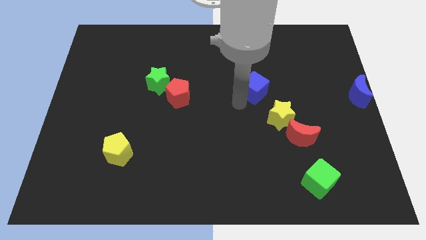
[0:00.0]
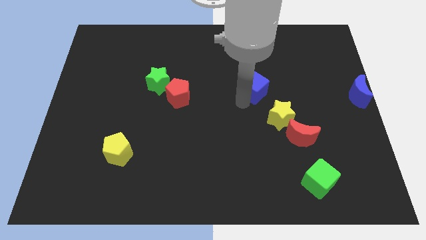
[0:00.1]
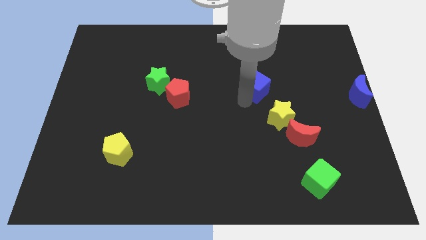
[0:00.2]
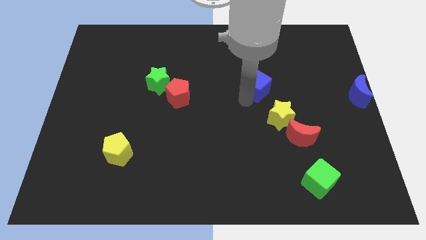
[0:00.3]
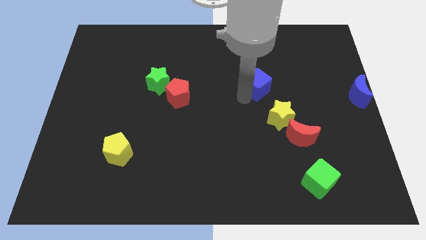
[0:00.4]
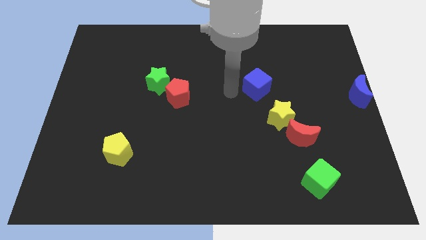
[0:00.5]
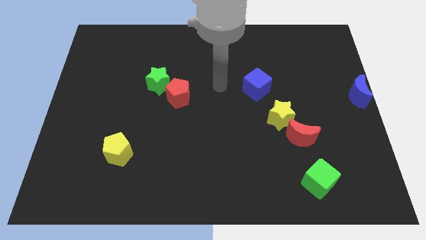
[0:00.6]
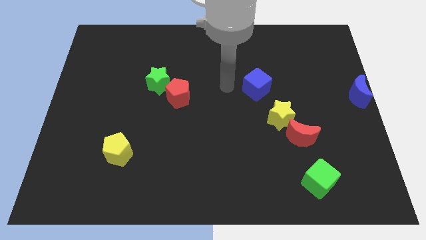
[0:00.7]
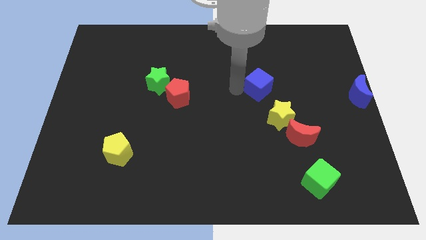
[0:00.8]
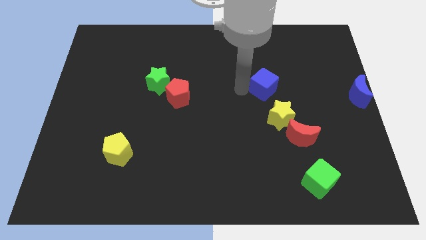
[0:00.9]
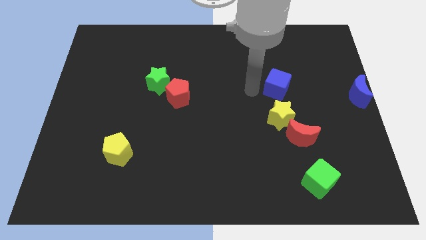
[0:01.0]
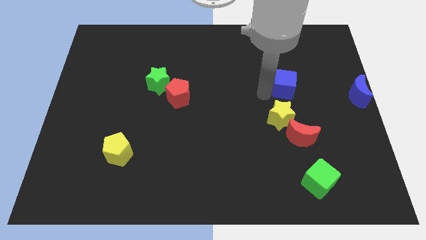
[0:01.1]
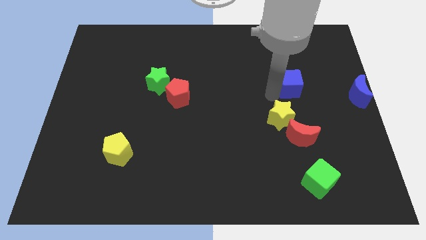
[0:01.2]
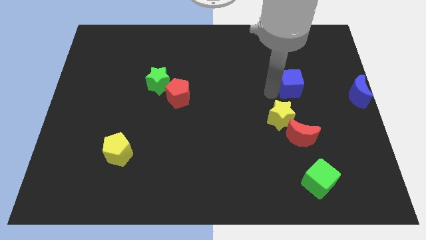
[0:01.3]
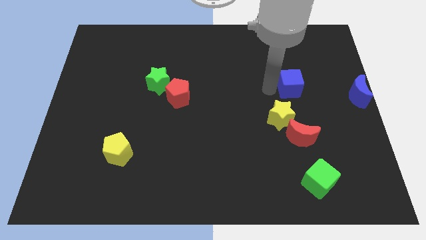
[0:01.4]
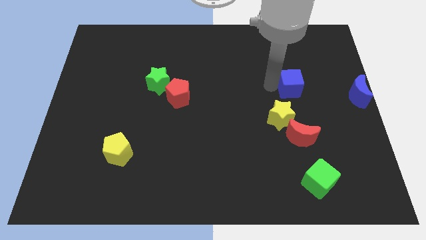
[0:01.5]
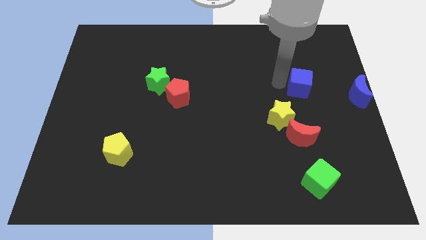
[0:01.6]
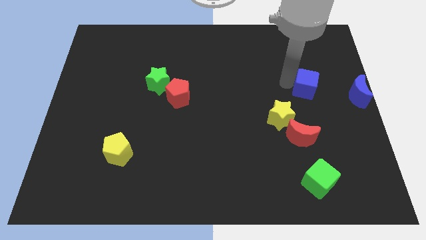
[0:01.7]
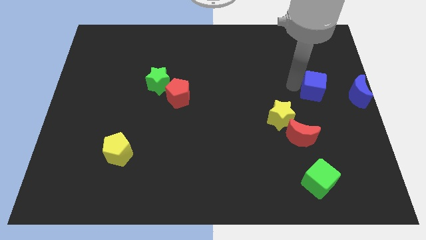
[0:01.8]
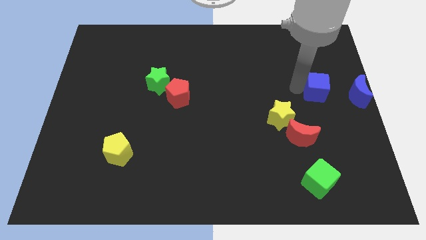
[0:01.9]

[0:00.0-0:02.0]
place the blue cube left to the blue moon

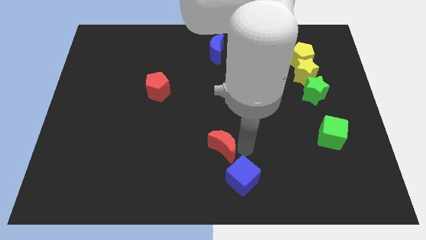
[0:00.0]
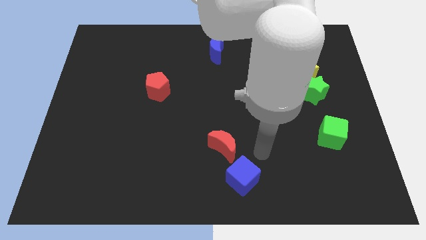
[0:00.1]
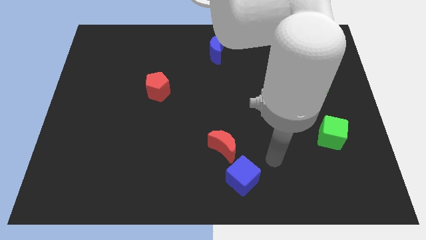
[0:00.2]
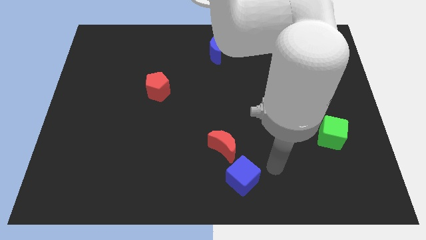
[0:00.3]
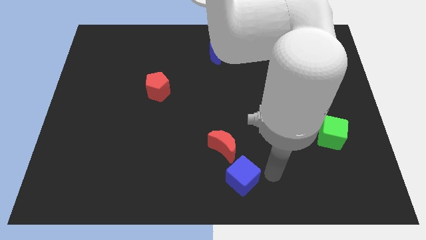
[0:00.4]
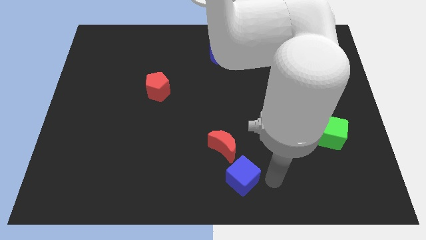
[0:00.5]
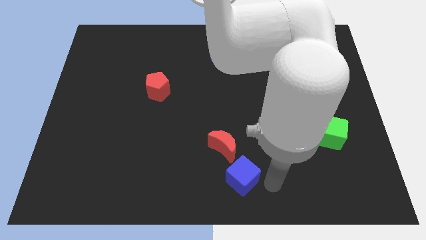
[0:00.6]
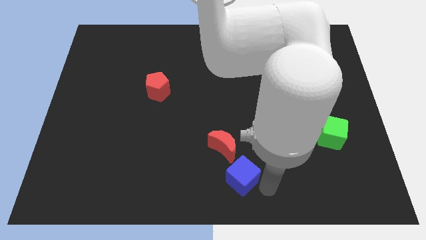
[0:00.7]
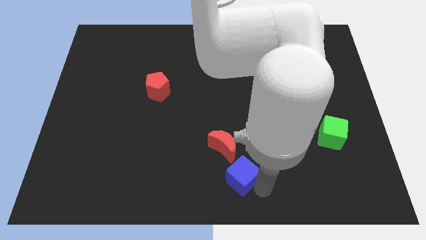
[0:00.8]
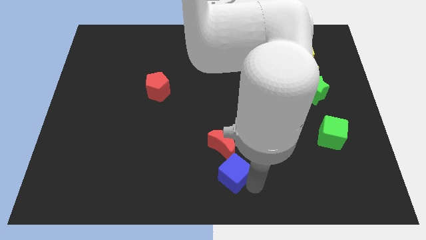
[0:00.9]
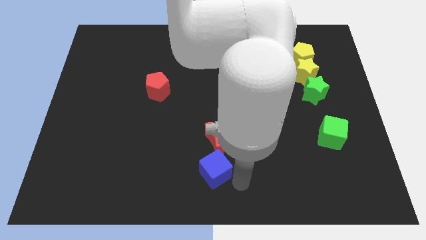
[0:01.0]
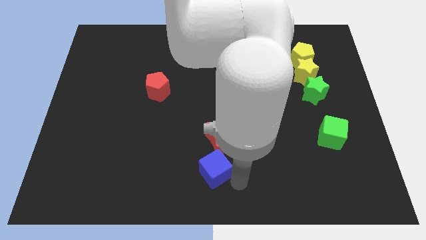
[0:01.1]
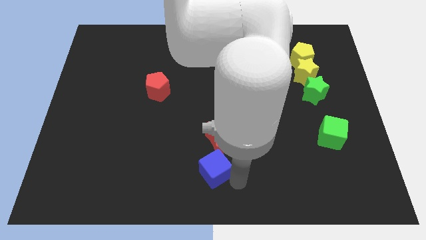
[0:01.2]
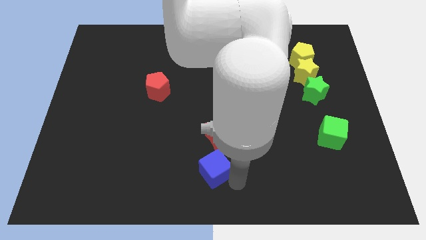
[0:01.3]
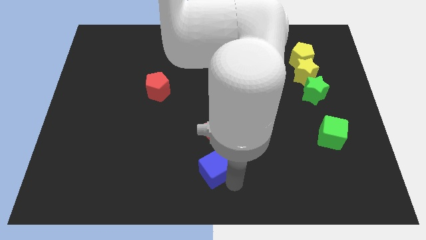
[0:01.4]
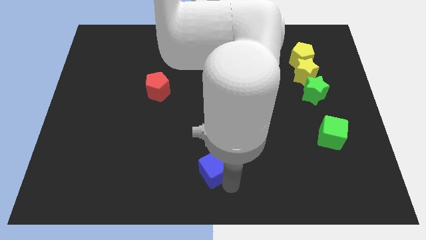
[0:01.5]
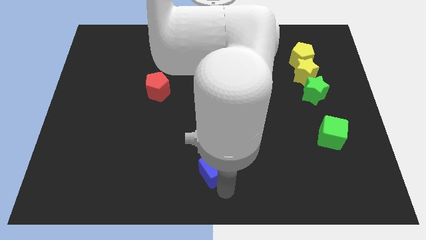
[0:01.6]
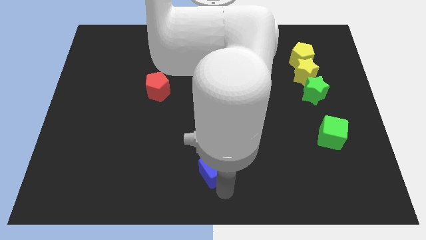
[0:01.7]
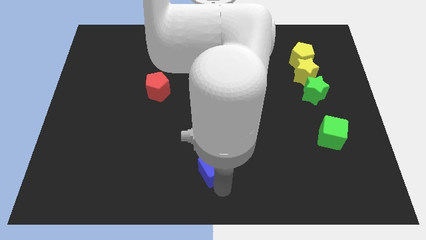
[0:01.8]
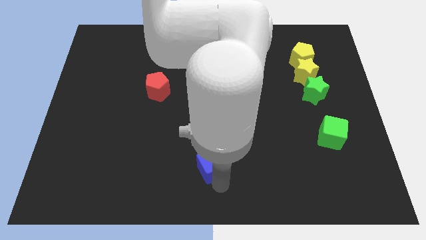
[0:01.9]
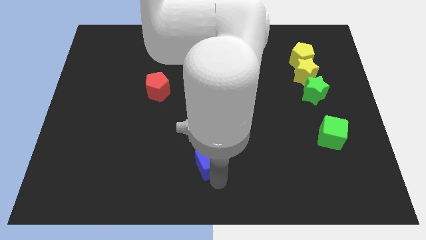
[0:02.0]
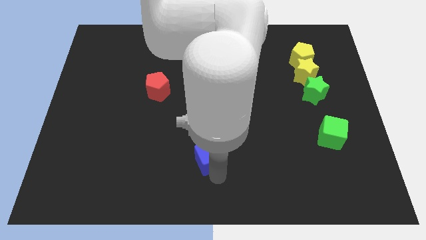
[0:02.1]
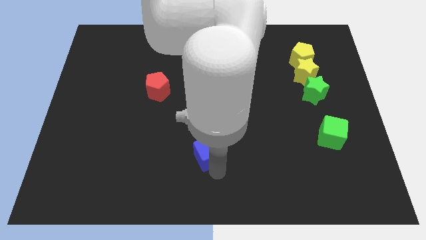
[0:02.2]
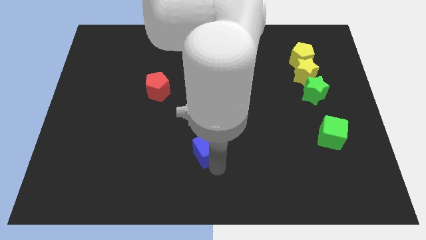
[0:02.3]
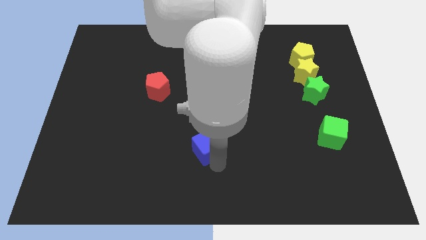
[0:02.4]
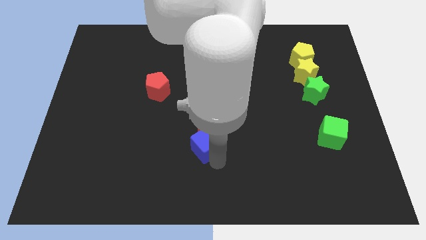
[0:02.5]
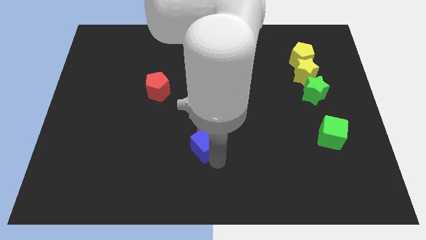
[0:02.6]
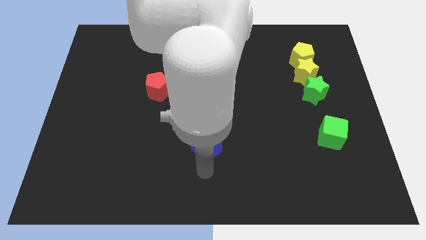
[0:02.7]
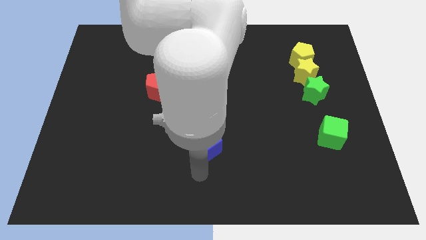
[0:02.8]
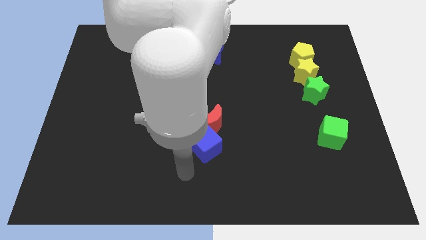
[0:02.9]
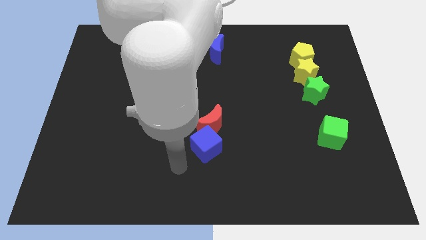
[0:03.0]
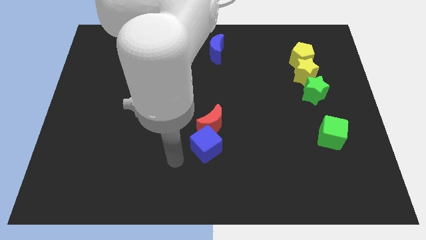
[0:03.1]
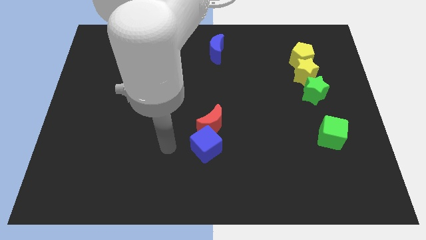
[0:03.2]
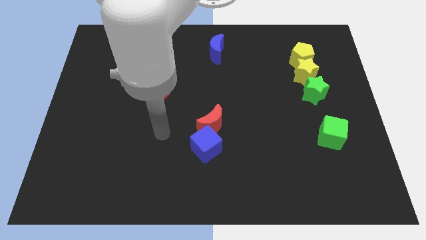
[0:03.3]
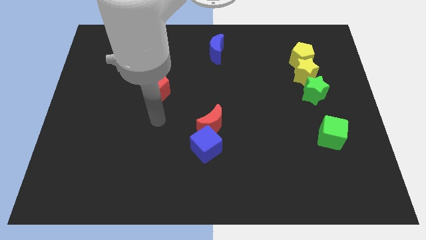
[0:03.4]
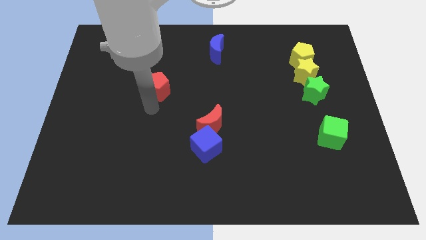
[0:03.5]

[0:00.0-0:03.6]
push the blue cube into the red moon

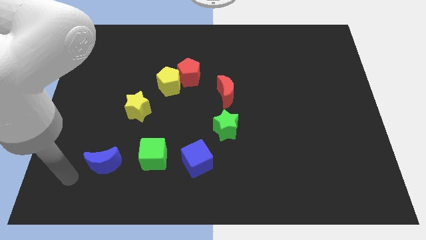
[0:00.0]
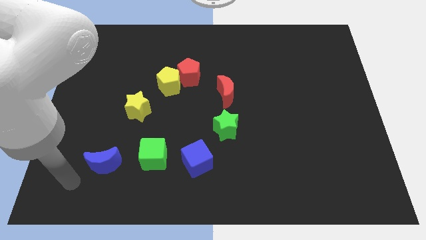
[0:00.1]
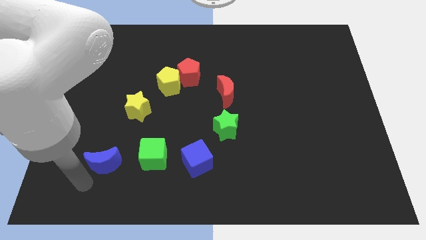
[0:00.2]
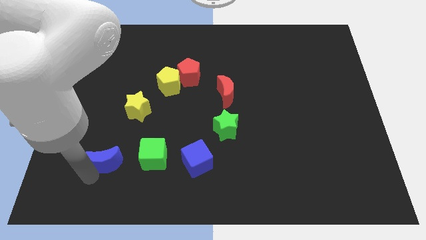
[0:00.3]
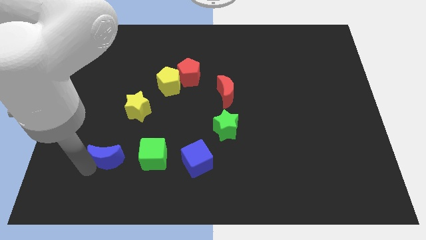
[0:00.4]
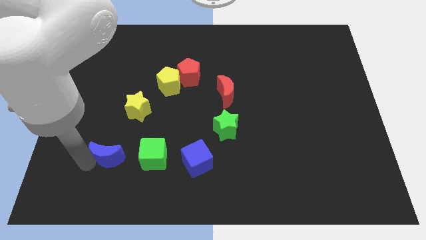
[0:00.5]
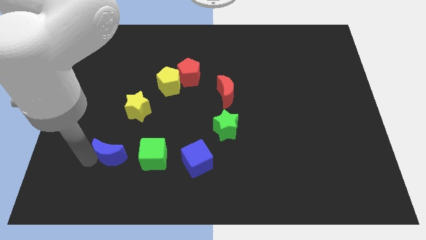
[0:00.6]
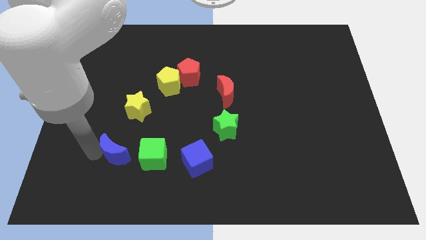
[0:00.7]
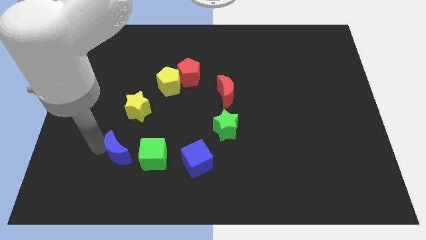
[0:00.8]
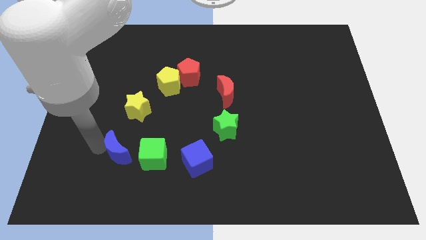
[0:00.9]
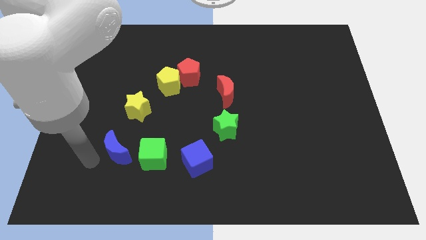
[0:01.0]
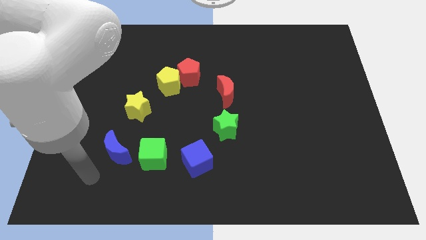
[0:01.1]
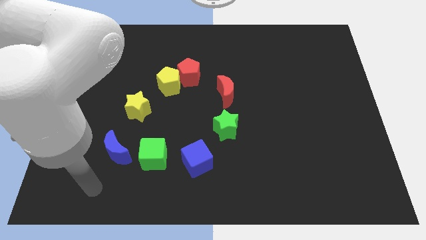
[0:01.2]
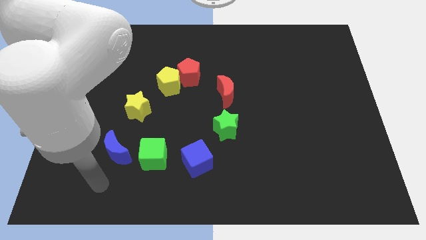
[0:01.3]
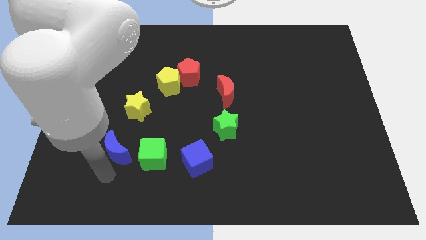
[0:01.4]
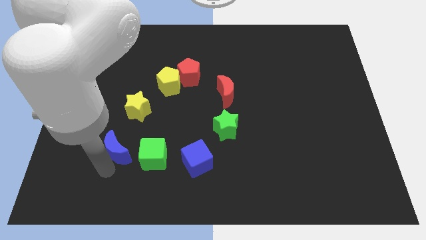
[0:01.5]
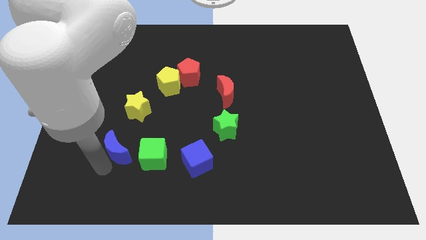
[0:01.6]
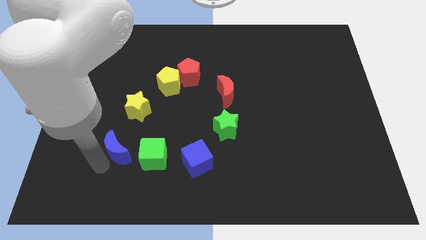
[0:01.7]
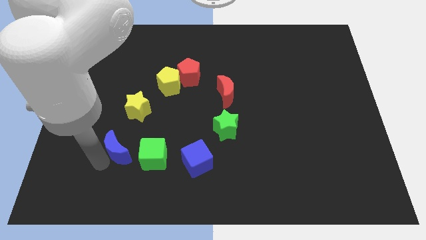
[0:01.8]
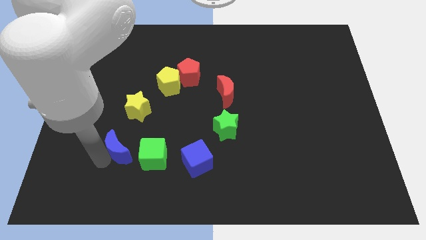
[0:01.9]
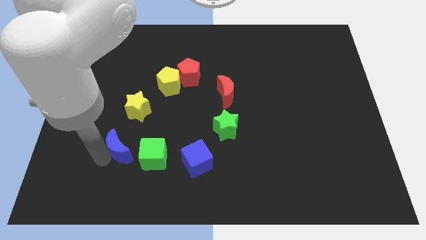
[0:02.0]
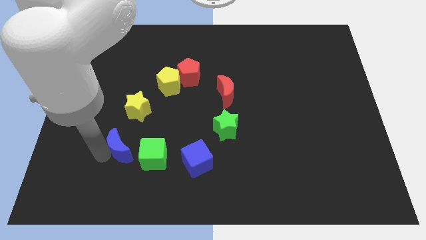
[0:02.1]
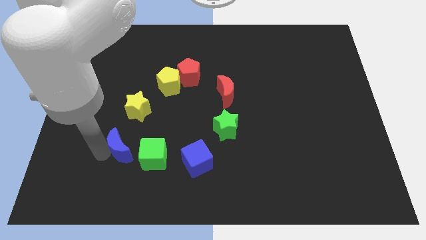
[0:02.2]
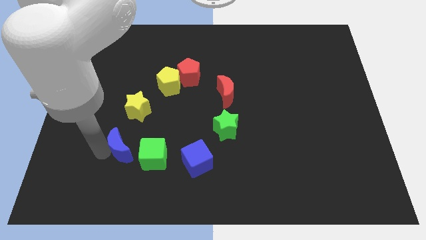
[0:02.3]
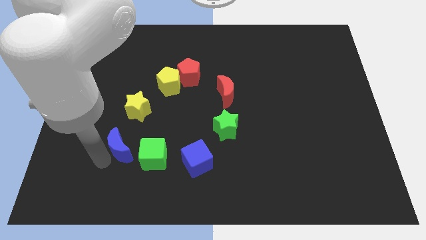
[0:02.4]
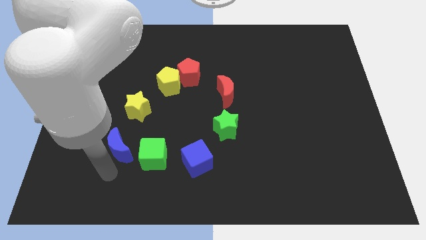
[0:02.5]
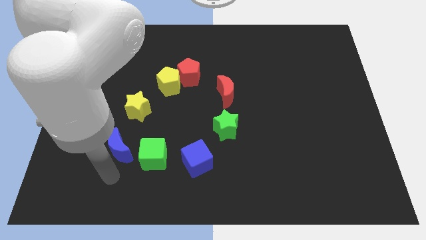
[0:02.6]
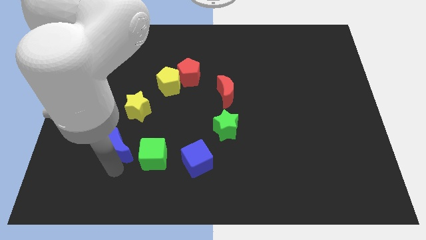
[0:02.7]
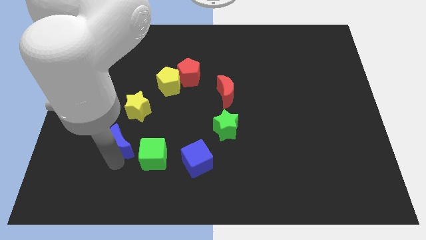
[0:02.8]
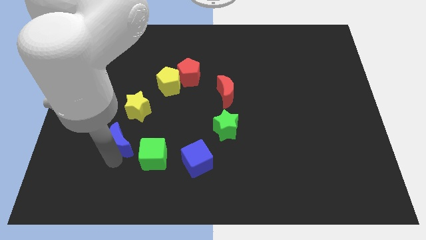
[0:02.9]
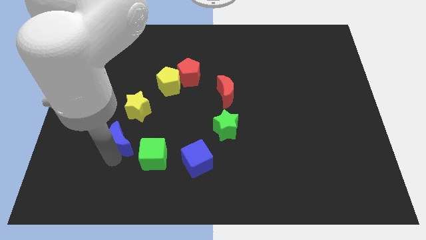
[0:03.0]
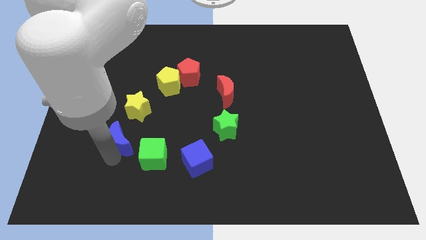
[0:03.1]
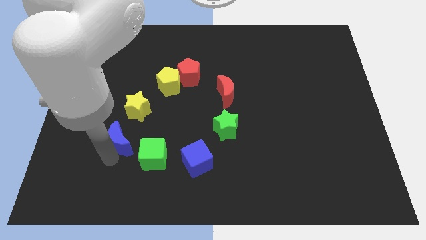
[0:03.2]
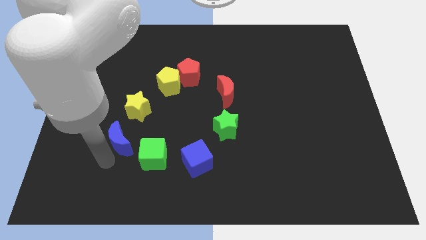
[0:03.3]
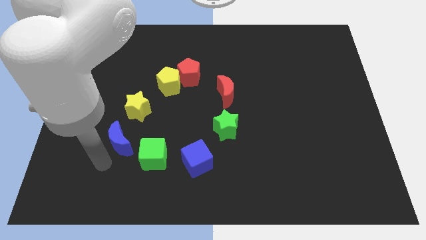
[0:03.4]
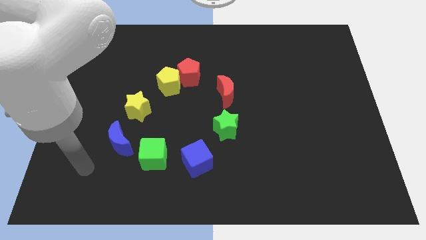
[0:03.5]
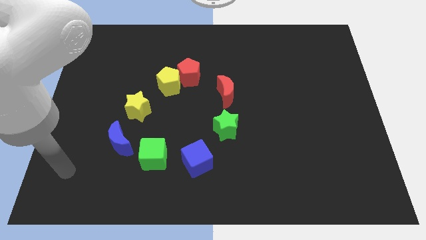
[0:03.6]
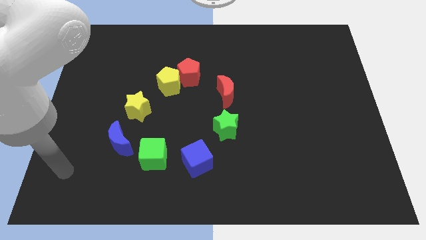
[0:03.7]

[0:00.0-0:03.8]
move the blue moon to the top left side of the green cube
